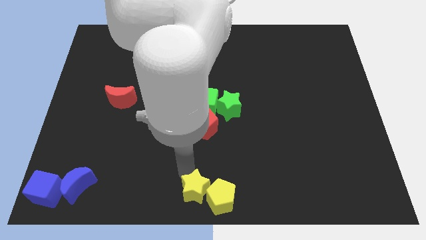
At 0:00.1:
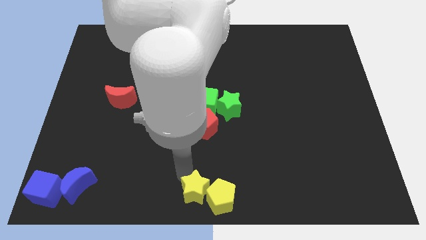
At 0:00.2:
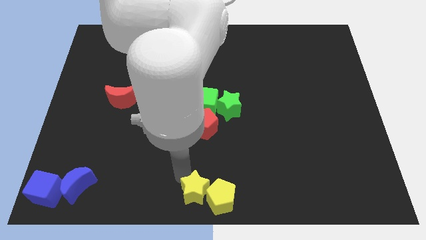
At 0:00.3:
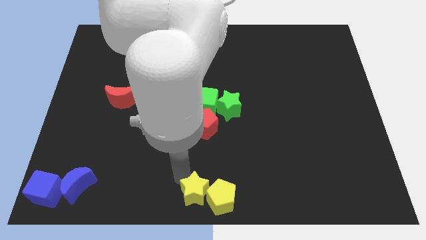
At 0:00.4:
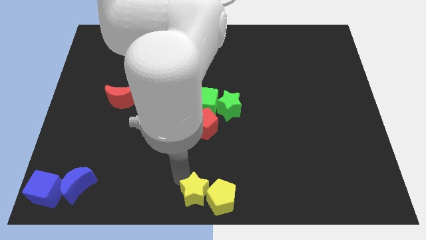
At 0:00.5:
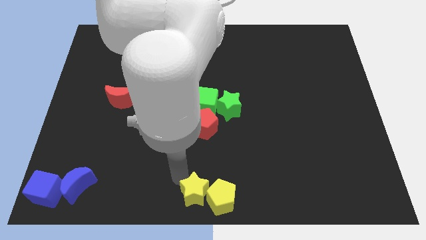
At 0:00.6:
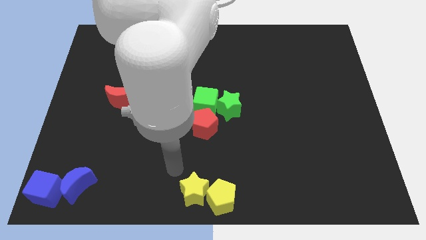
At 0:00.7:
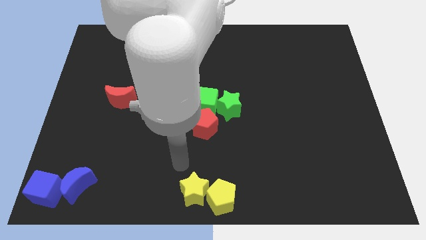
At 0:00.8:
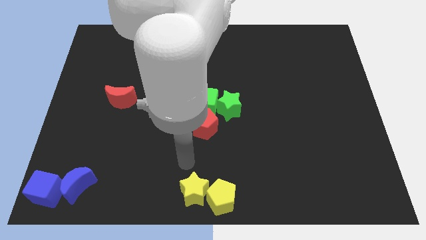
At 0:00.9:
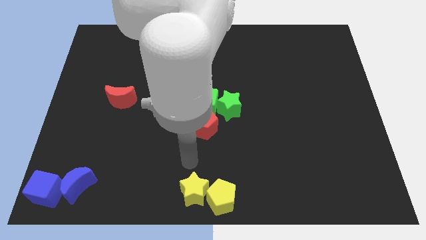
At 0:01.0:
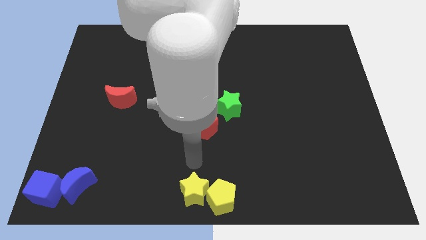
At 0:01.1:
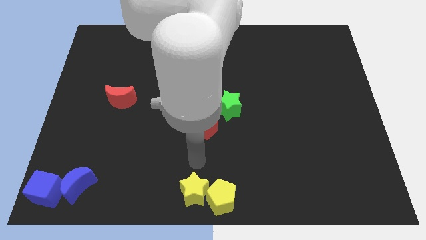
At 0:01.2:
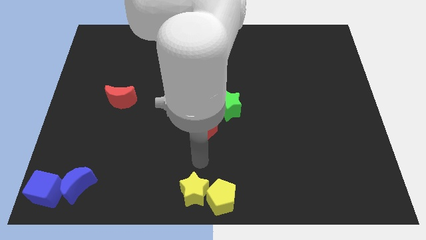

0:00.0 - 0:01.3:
push the yellow star to the left of the yellow pentagon

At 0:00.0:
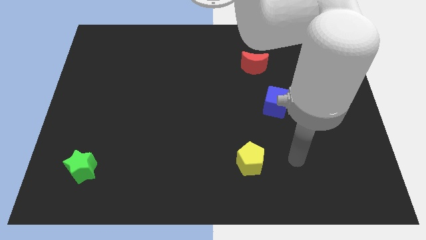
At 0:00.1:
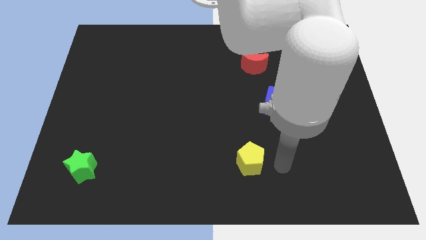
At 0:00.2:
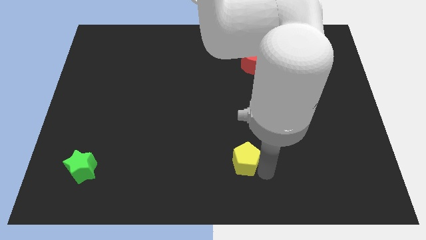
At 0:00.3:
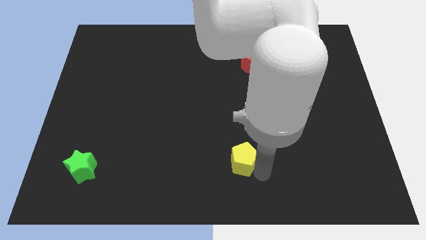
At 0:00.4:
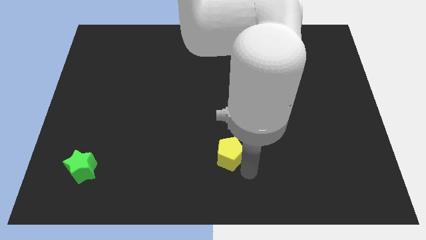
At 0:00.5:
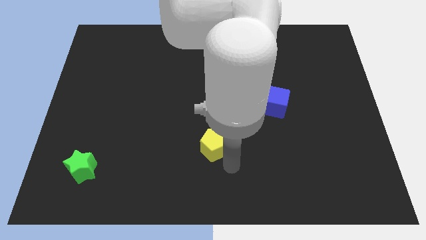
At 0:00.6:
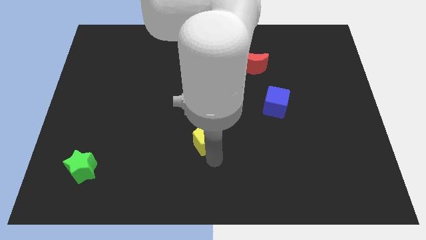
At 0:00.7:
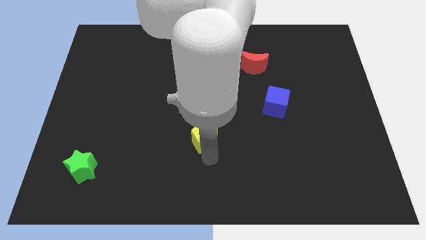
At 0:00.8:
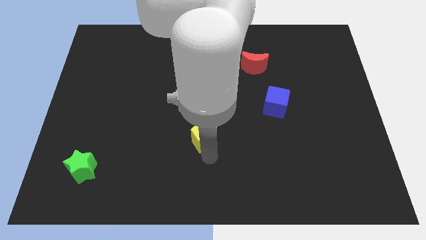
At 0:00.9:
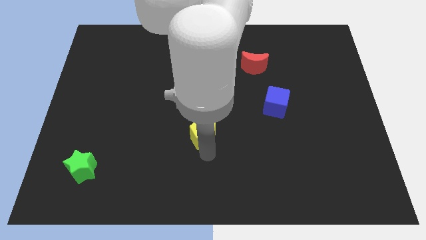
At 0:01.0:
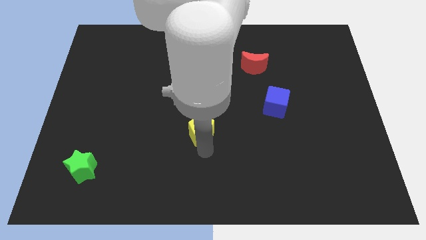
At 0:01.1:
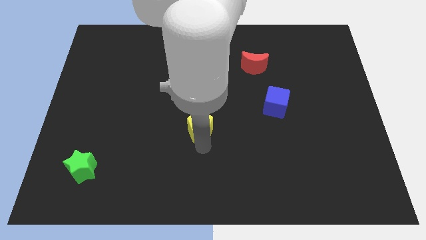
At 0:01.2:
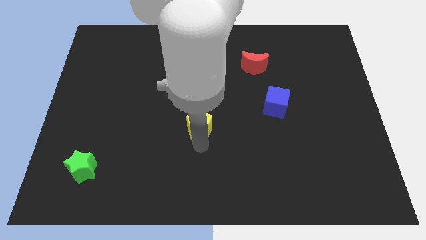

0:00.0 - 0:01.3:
move the yellow pentagon towards the center of the table

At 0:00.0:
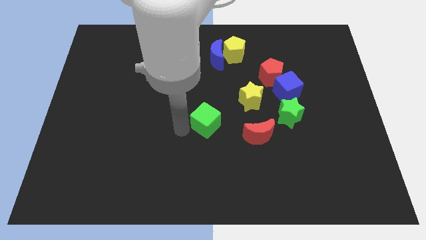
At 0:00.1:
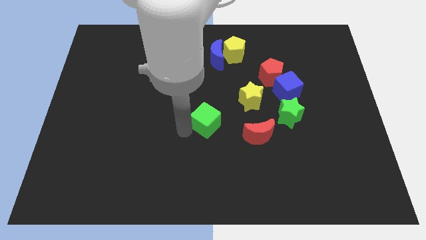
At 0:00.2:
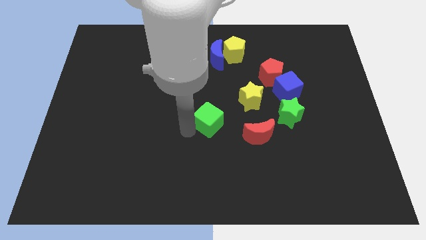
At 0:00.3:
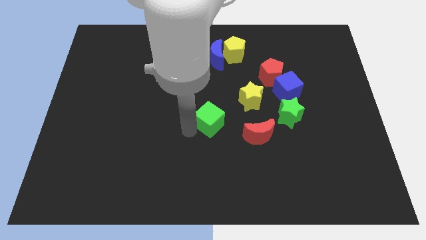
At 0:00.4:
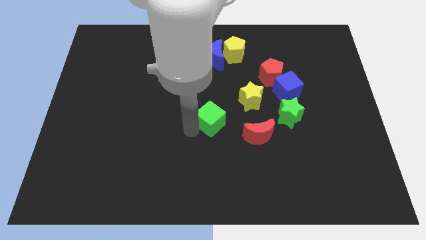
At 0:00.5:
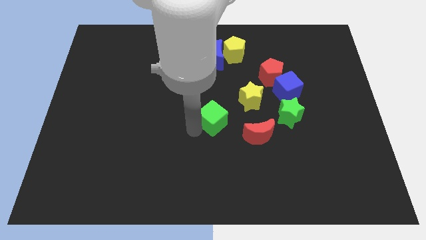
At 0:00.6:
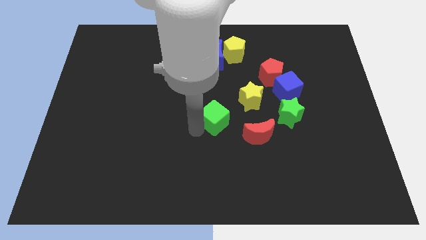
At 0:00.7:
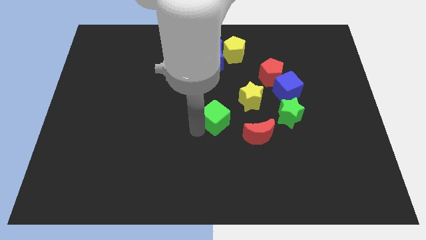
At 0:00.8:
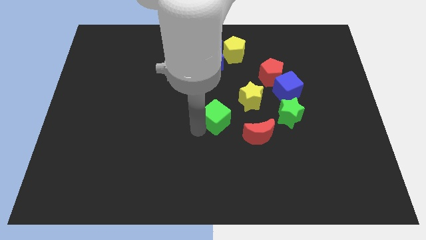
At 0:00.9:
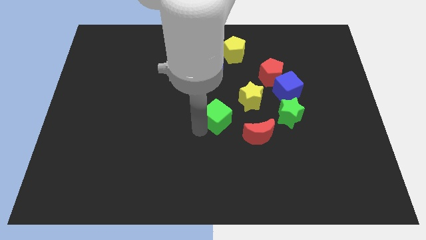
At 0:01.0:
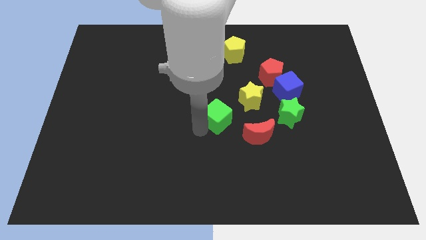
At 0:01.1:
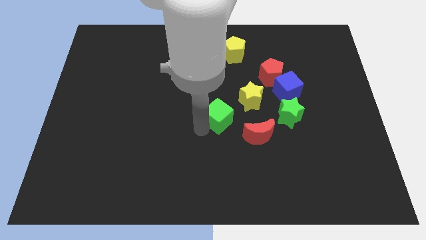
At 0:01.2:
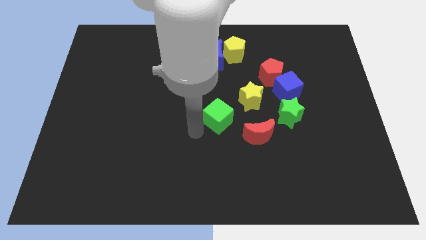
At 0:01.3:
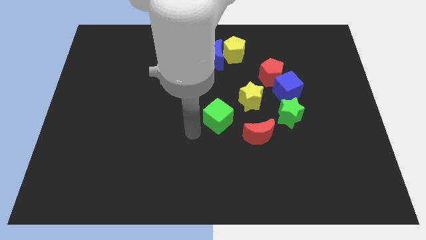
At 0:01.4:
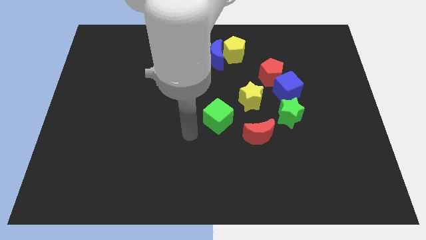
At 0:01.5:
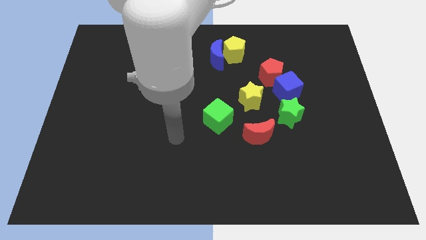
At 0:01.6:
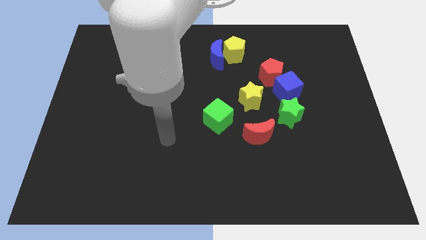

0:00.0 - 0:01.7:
move the green cube to the left of the green star

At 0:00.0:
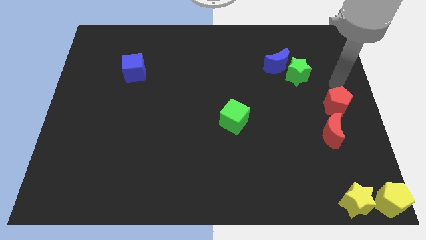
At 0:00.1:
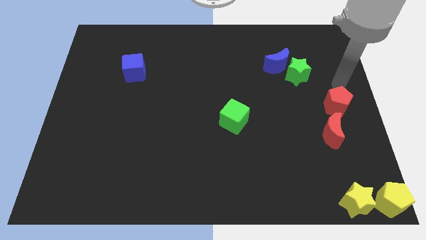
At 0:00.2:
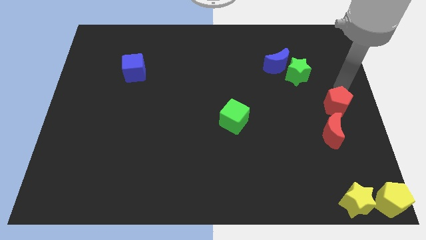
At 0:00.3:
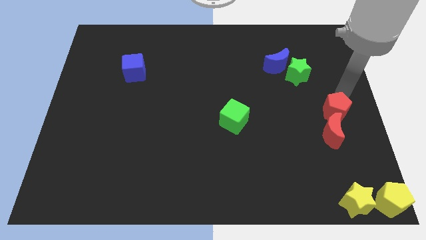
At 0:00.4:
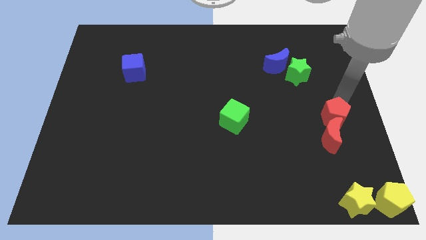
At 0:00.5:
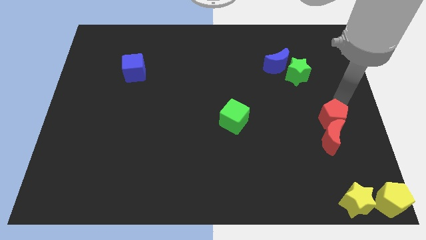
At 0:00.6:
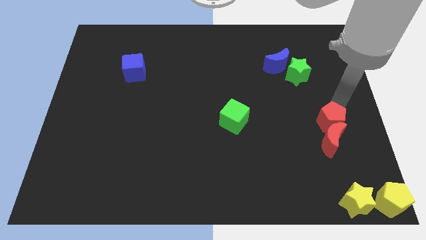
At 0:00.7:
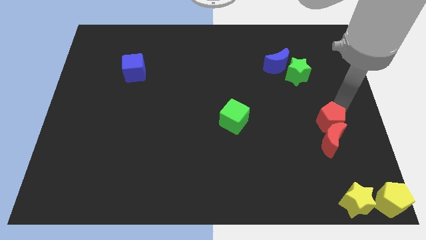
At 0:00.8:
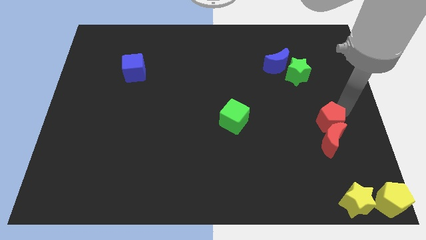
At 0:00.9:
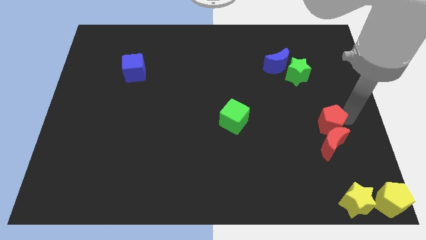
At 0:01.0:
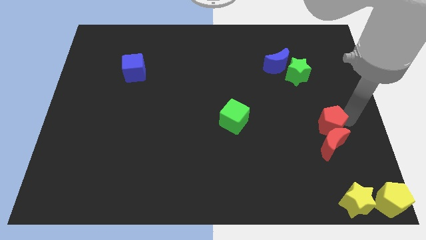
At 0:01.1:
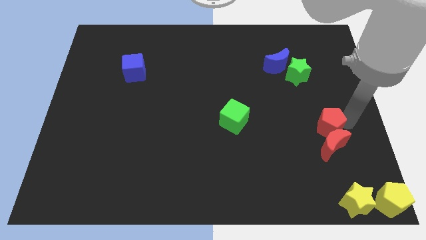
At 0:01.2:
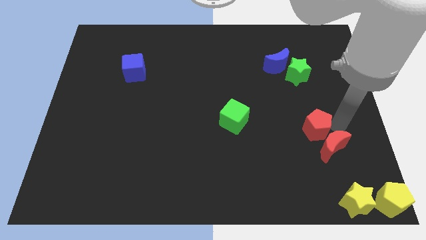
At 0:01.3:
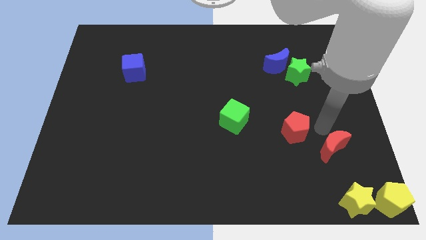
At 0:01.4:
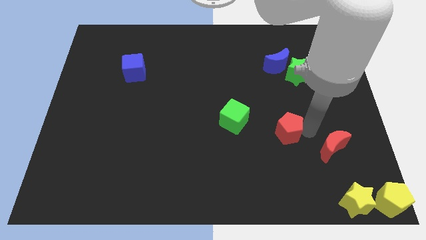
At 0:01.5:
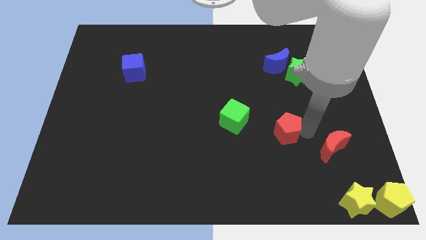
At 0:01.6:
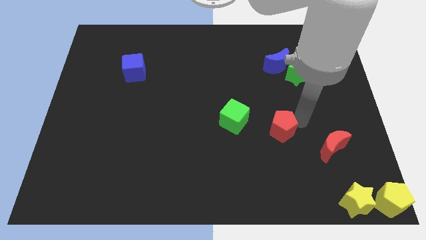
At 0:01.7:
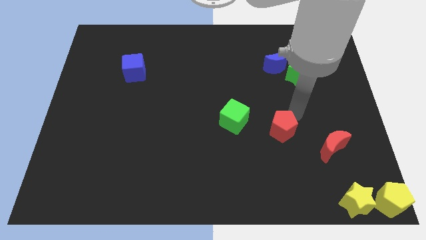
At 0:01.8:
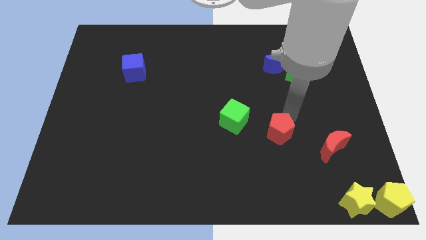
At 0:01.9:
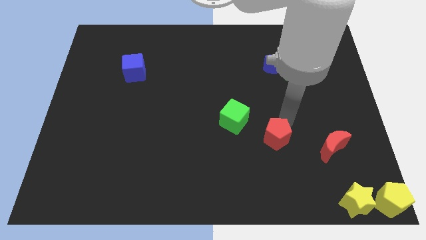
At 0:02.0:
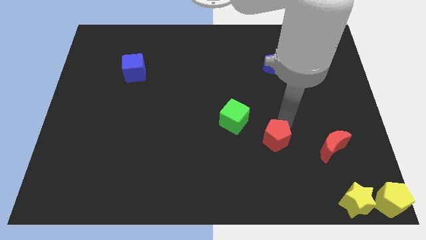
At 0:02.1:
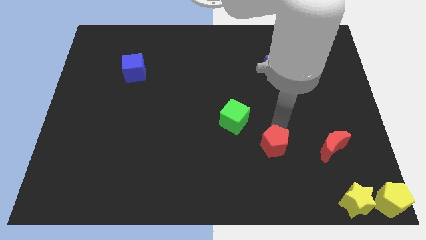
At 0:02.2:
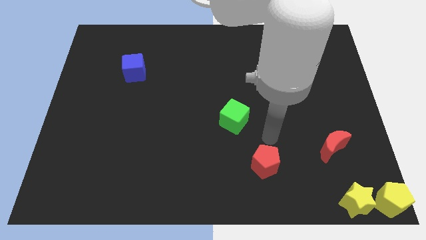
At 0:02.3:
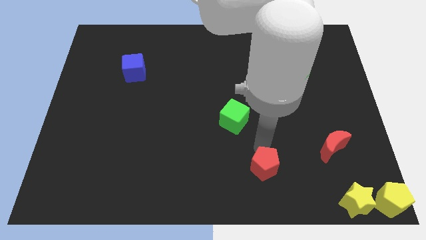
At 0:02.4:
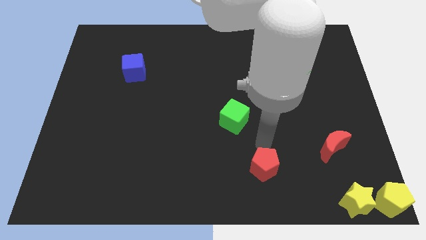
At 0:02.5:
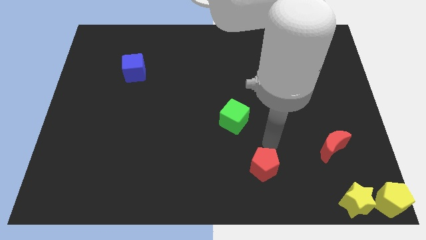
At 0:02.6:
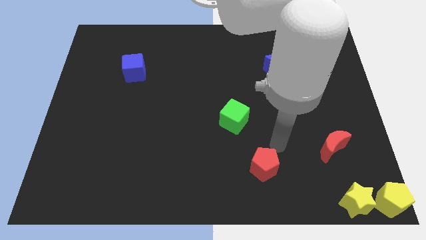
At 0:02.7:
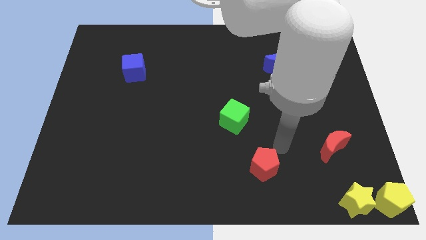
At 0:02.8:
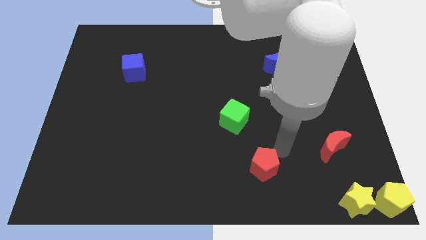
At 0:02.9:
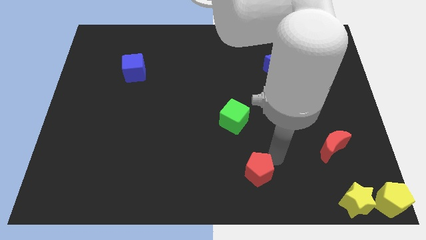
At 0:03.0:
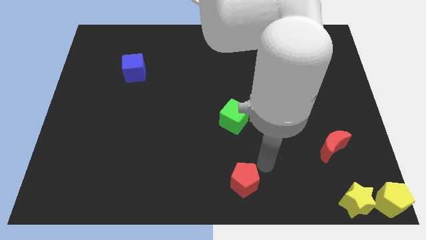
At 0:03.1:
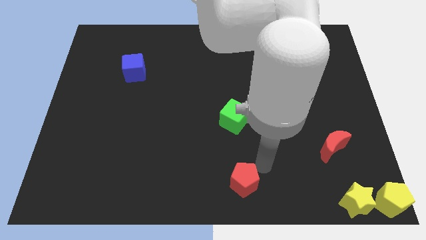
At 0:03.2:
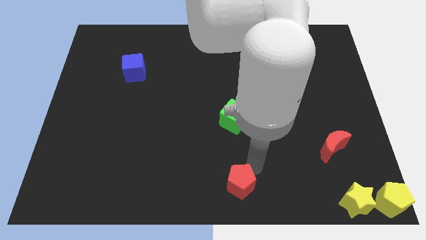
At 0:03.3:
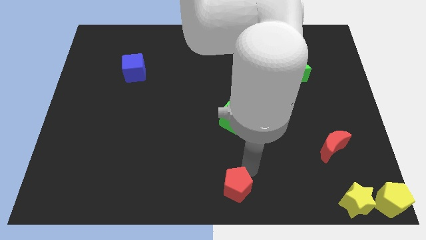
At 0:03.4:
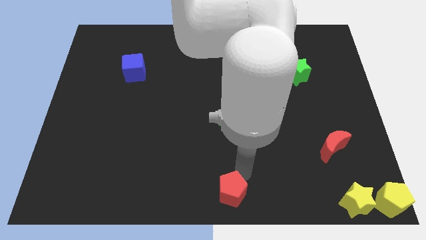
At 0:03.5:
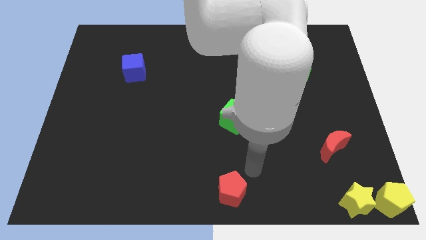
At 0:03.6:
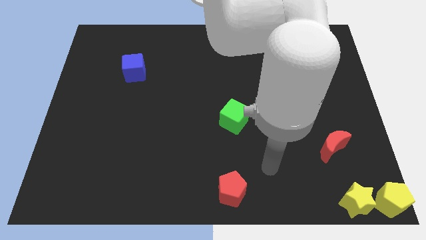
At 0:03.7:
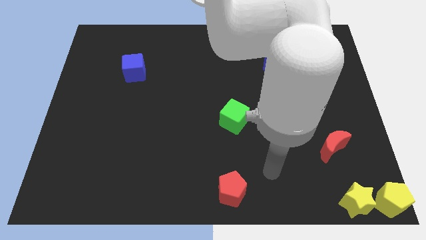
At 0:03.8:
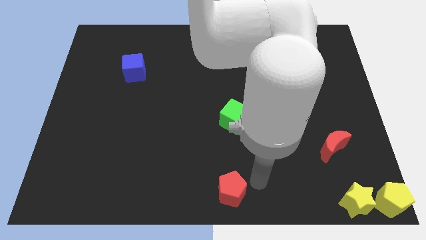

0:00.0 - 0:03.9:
push the red pentagon diagonally bottom left to the red moon

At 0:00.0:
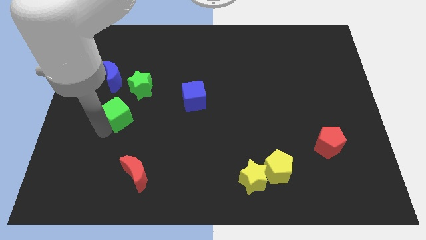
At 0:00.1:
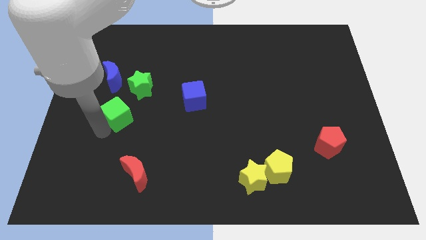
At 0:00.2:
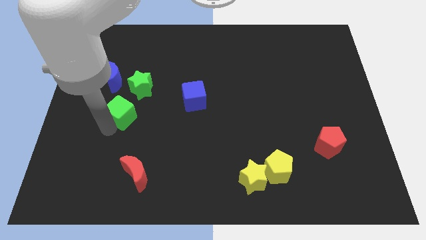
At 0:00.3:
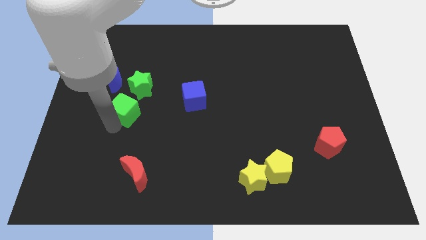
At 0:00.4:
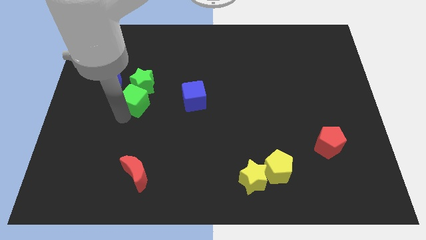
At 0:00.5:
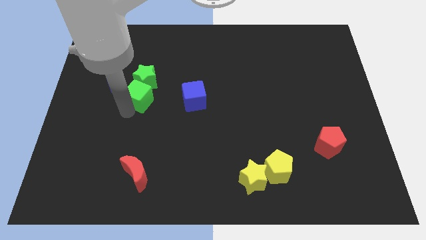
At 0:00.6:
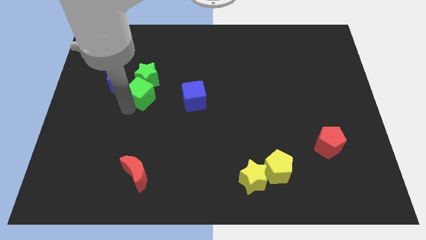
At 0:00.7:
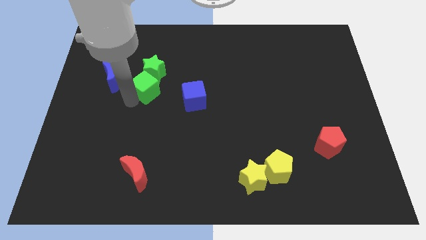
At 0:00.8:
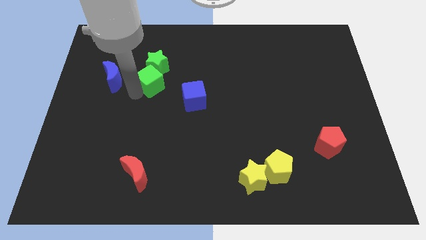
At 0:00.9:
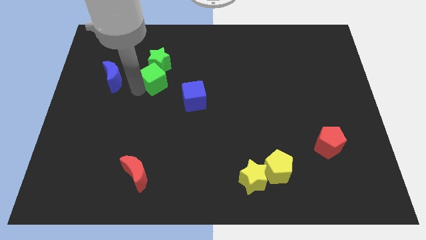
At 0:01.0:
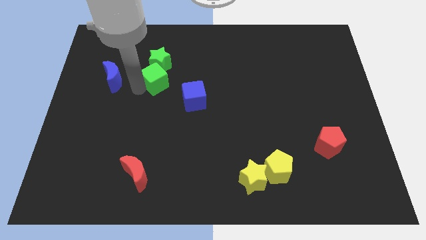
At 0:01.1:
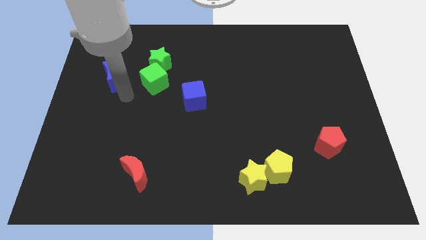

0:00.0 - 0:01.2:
push the green cube into the green star
